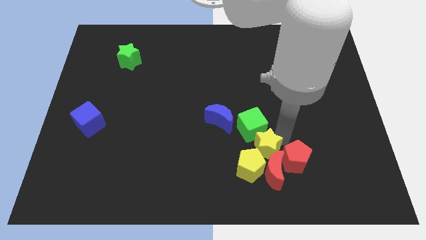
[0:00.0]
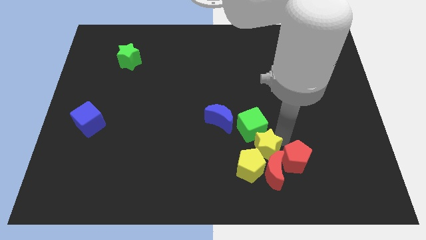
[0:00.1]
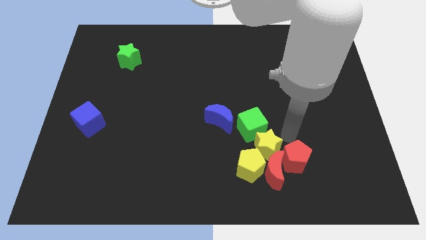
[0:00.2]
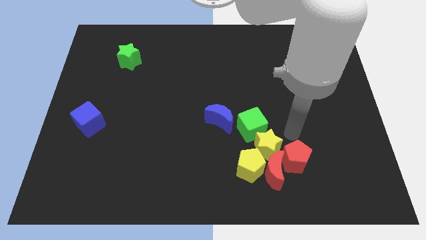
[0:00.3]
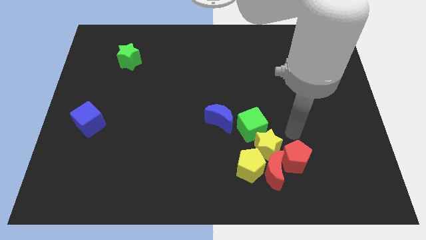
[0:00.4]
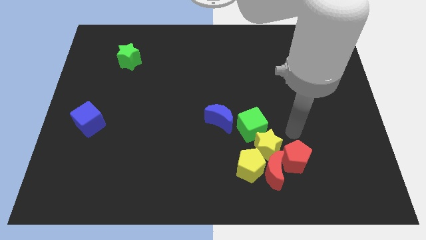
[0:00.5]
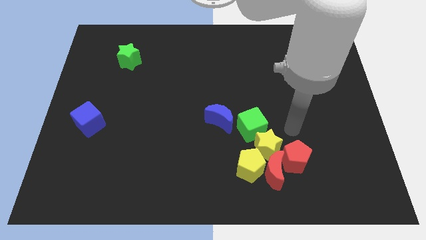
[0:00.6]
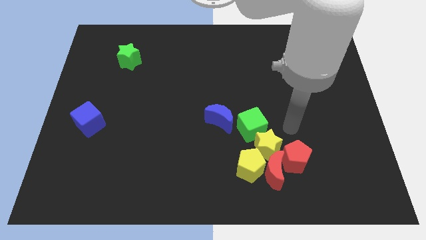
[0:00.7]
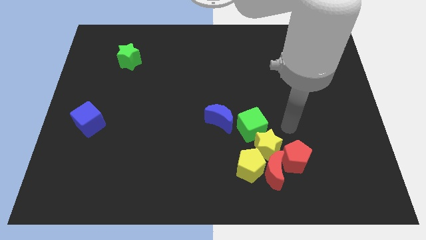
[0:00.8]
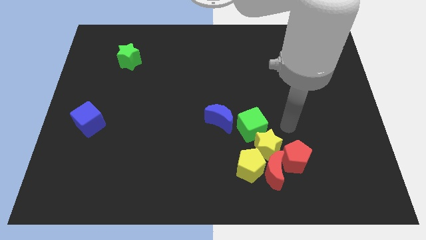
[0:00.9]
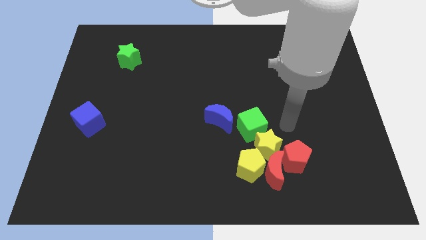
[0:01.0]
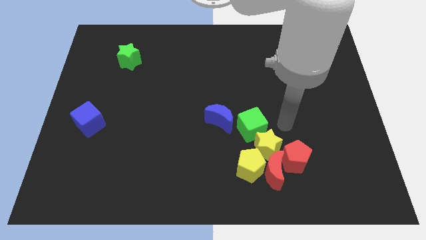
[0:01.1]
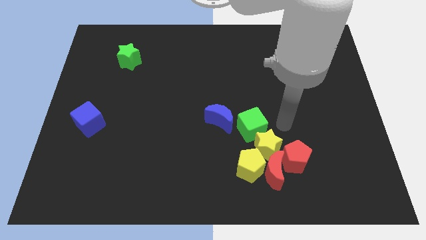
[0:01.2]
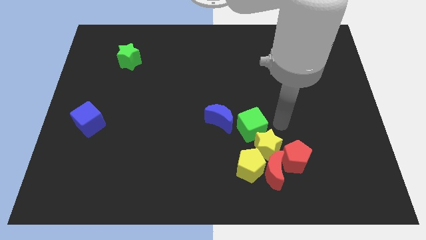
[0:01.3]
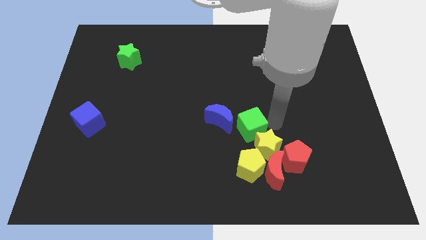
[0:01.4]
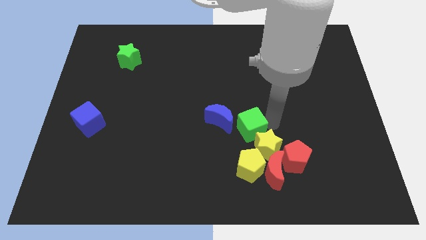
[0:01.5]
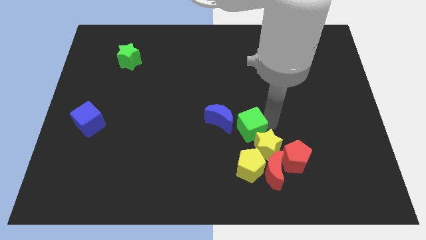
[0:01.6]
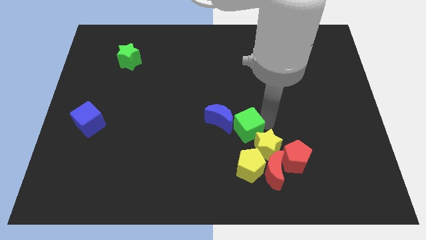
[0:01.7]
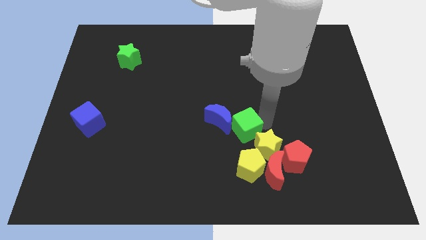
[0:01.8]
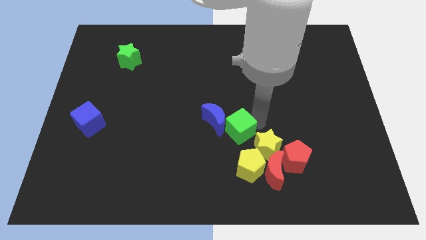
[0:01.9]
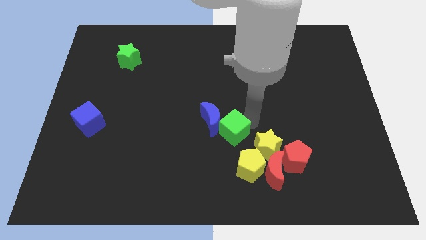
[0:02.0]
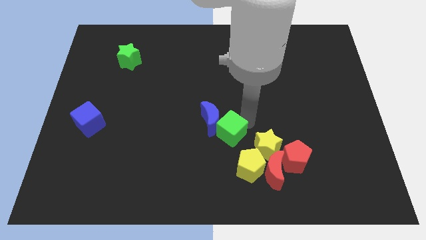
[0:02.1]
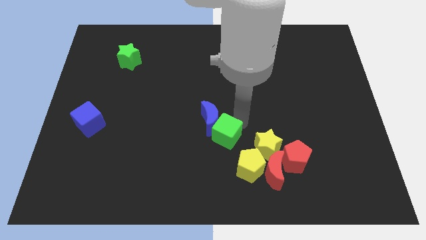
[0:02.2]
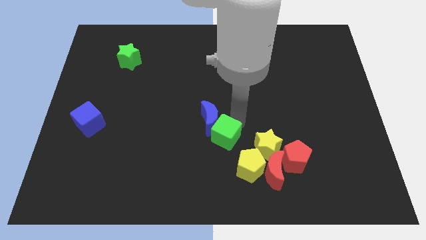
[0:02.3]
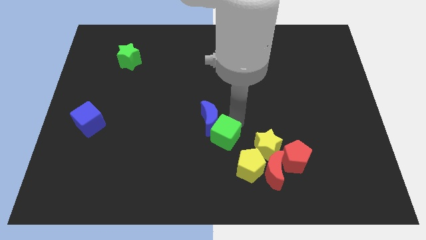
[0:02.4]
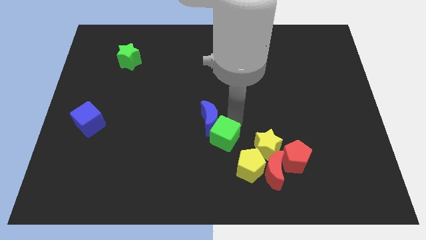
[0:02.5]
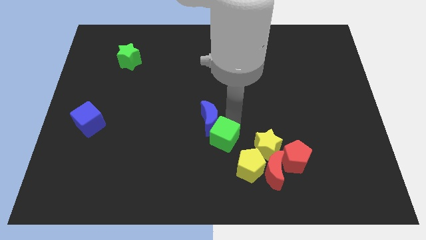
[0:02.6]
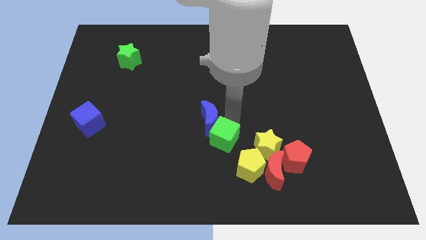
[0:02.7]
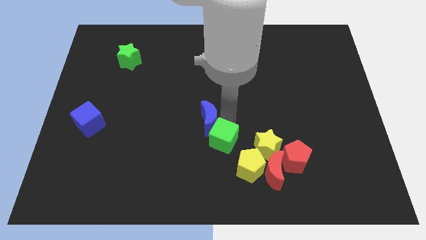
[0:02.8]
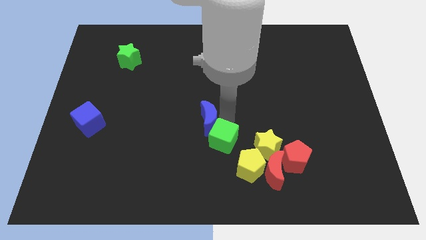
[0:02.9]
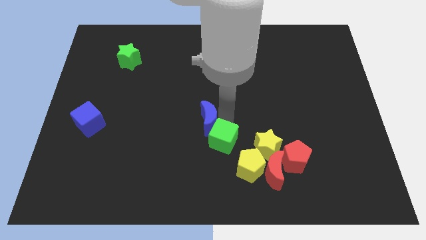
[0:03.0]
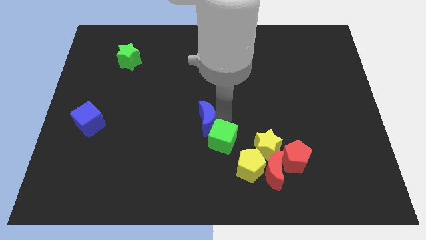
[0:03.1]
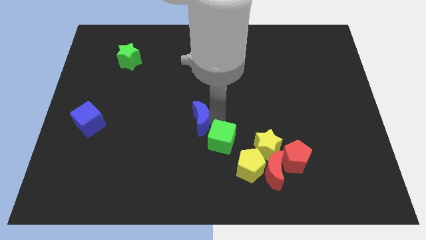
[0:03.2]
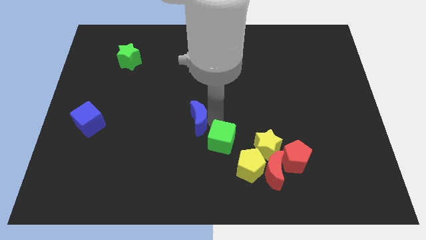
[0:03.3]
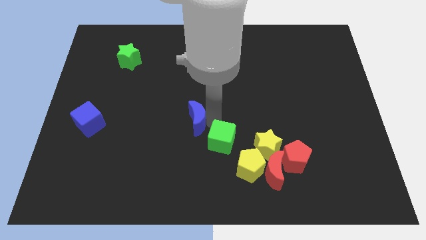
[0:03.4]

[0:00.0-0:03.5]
place the green cube to the left of the yellow star

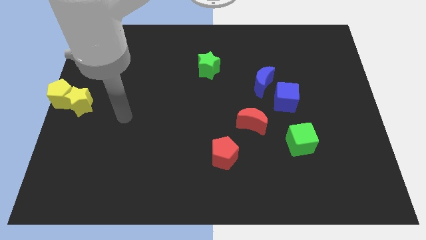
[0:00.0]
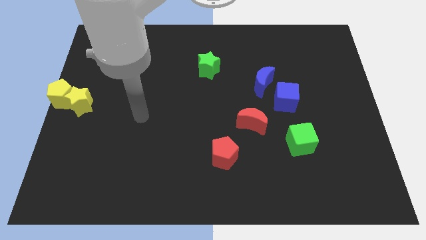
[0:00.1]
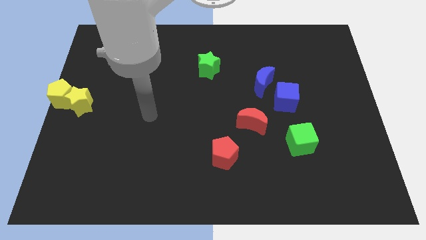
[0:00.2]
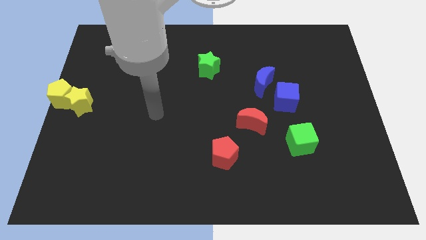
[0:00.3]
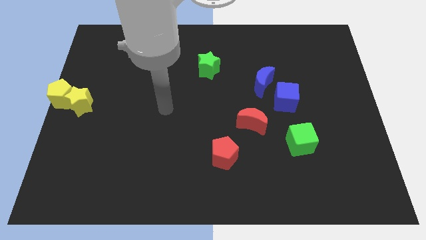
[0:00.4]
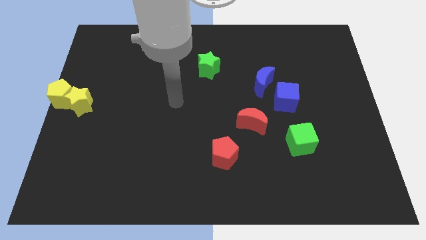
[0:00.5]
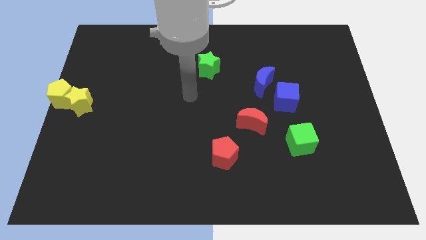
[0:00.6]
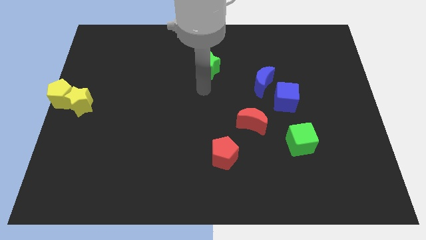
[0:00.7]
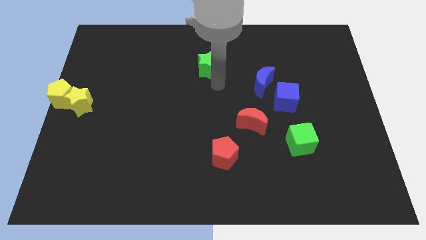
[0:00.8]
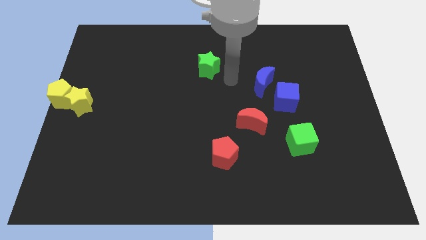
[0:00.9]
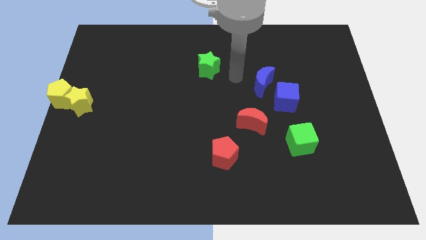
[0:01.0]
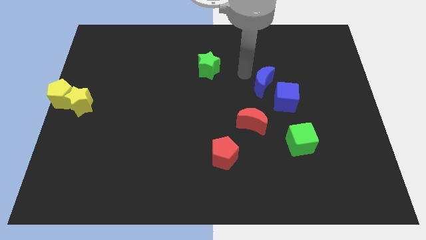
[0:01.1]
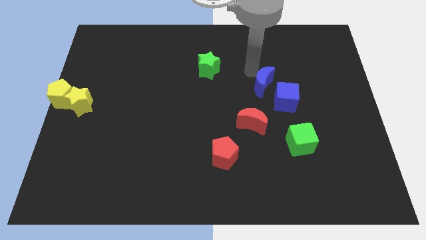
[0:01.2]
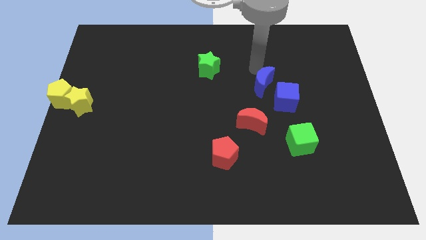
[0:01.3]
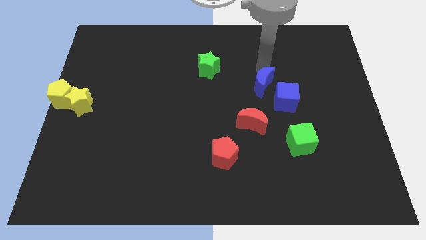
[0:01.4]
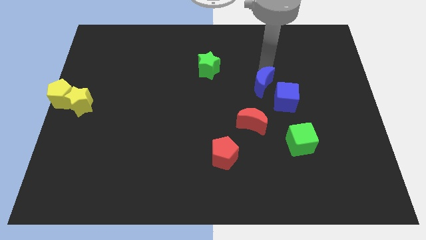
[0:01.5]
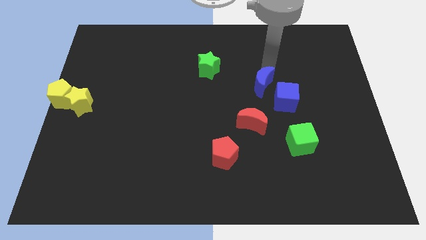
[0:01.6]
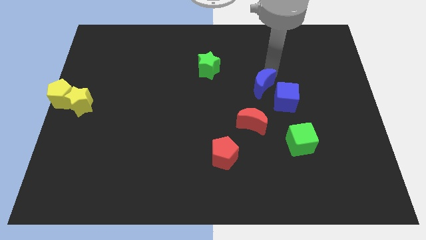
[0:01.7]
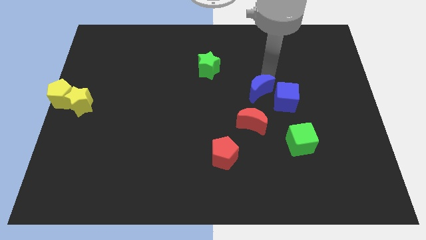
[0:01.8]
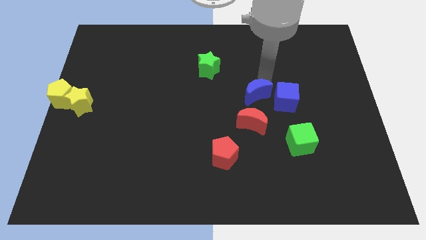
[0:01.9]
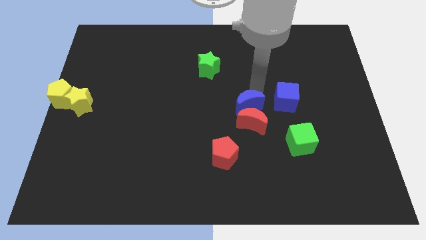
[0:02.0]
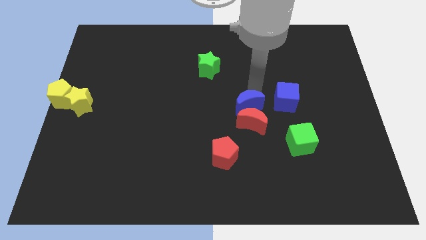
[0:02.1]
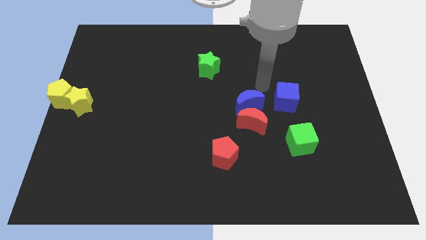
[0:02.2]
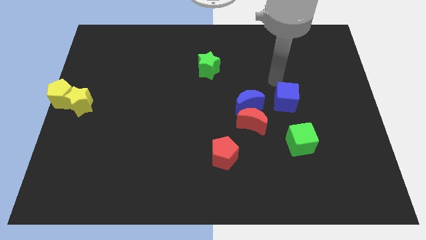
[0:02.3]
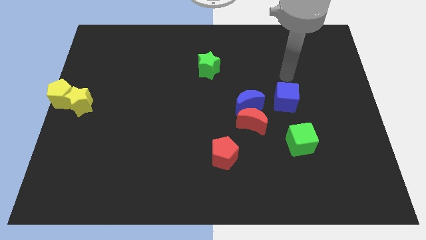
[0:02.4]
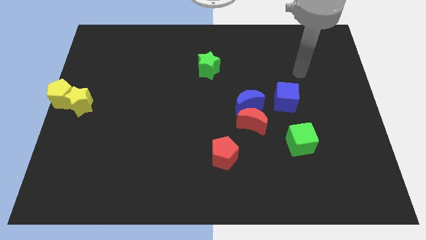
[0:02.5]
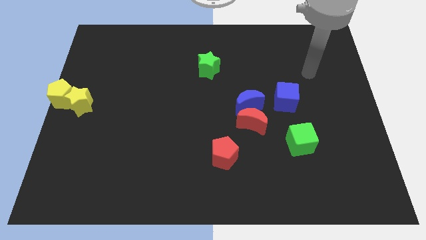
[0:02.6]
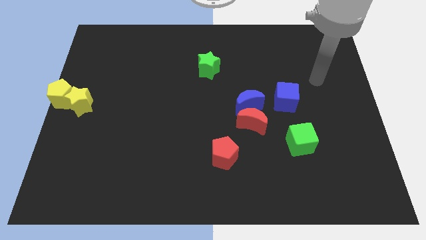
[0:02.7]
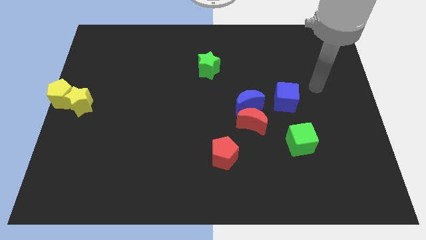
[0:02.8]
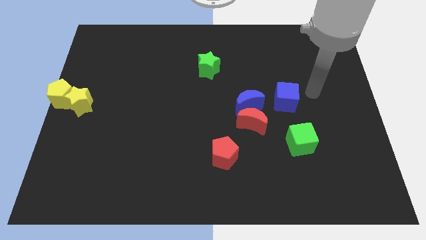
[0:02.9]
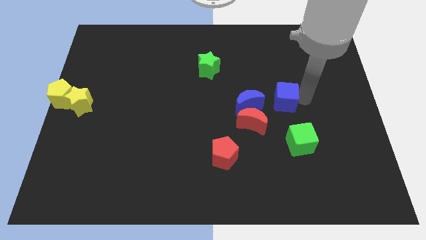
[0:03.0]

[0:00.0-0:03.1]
push the blue moon slightly on the top of the red moon

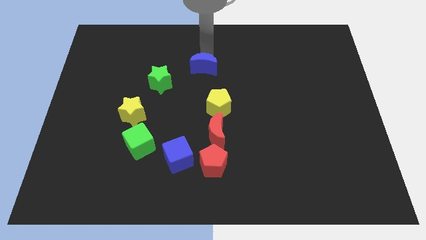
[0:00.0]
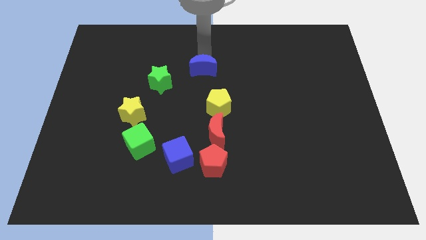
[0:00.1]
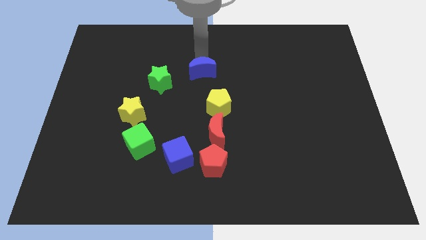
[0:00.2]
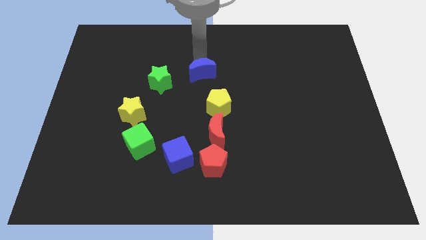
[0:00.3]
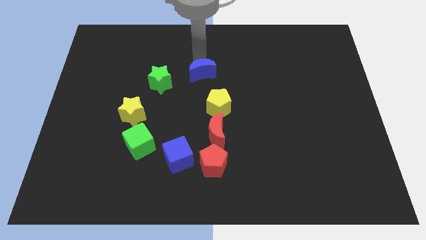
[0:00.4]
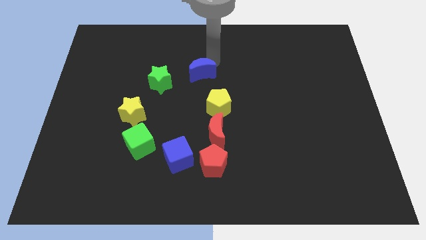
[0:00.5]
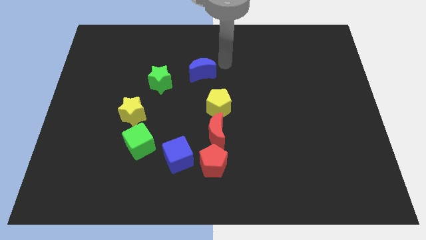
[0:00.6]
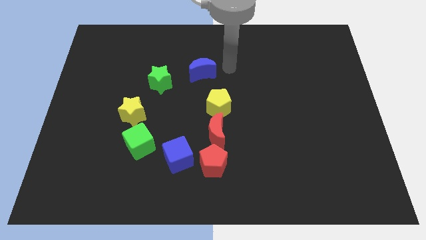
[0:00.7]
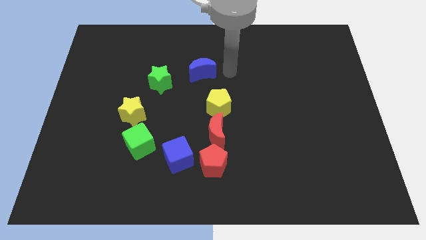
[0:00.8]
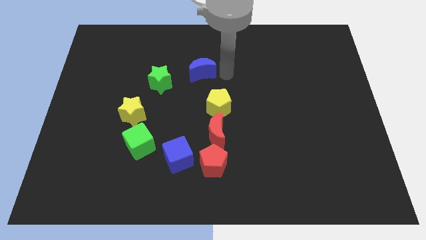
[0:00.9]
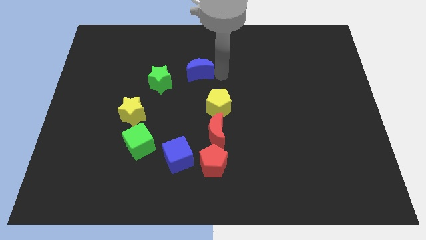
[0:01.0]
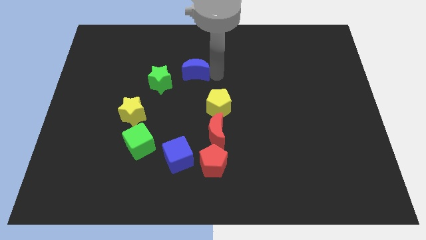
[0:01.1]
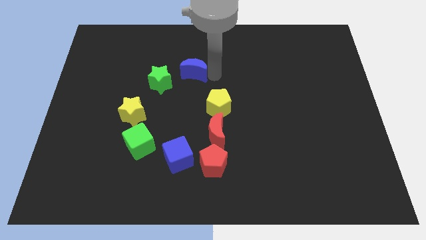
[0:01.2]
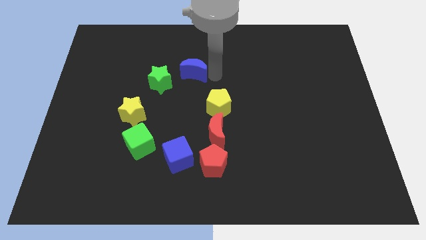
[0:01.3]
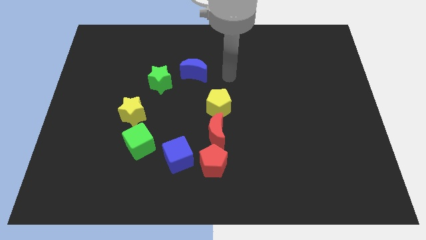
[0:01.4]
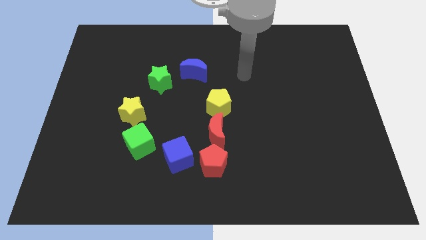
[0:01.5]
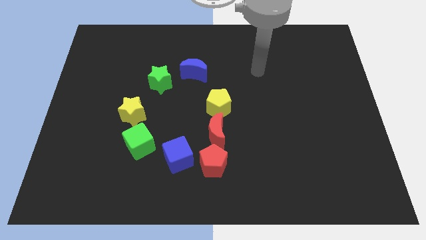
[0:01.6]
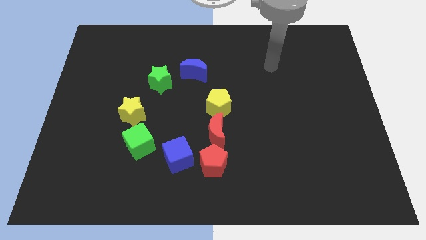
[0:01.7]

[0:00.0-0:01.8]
slightly move the blue crescent to its left

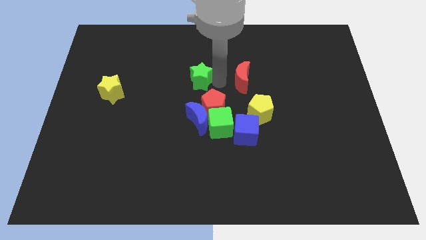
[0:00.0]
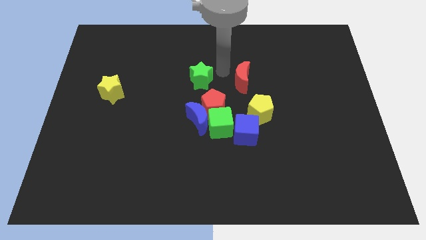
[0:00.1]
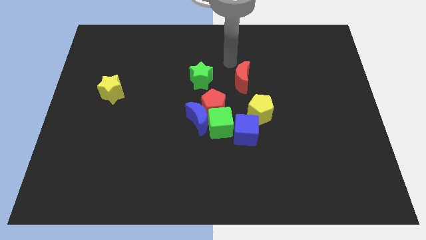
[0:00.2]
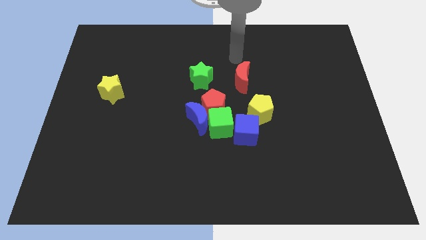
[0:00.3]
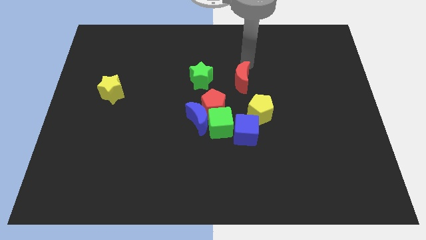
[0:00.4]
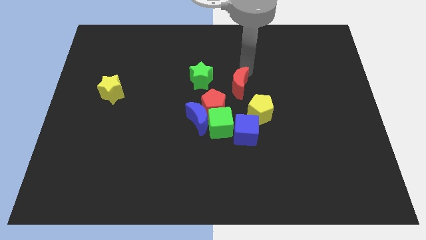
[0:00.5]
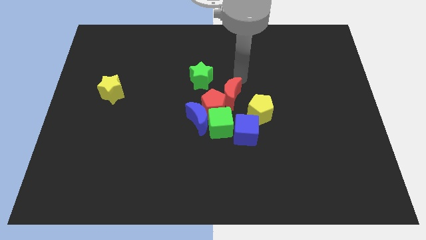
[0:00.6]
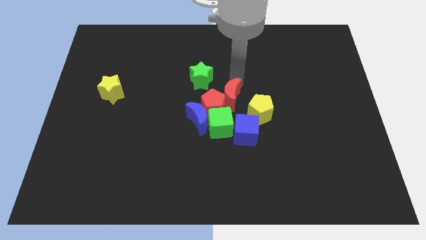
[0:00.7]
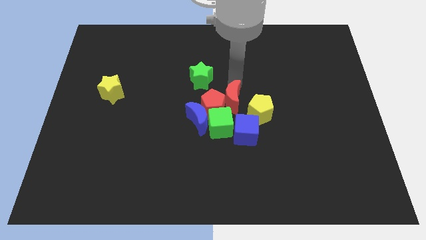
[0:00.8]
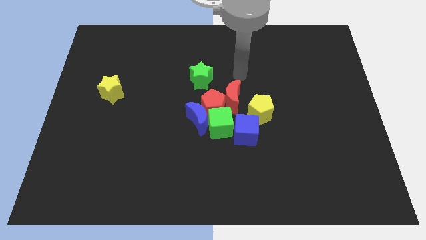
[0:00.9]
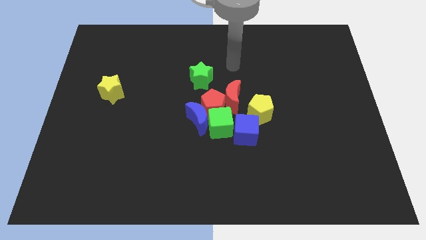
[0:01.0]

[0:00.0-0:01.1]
push the red crescent to the right of the red pentagon
